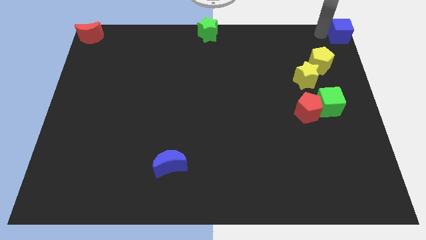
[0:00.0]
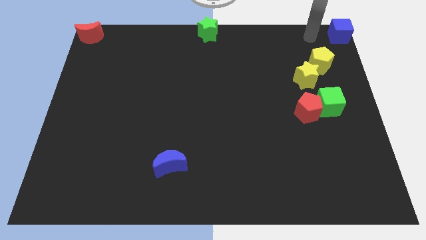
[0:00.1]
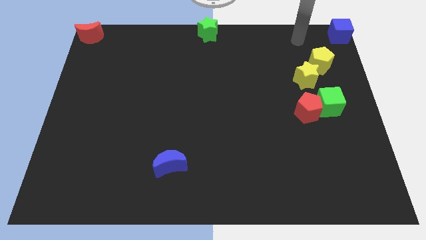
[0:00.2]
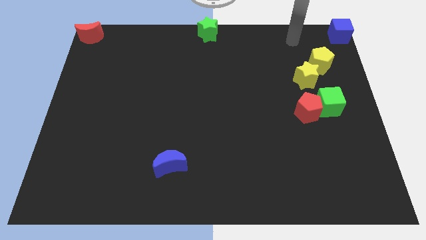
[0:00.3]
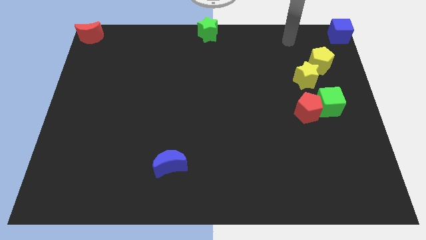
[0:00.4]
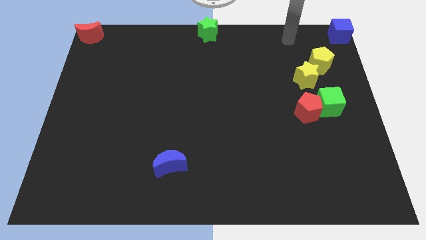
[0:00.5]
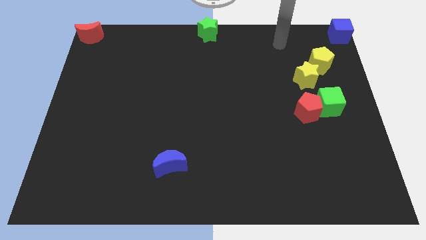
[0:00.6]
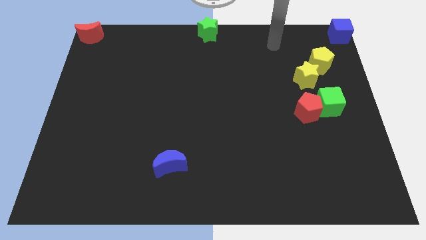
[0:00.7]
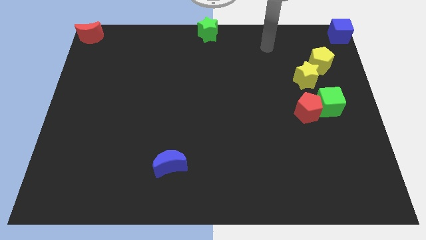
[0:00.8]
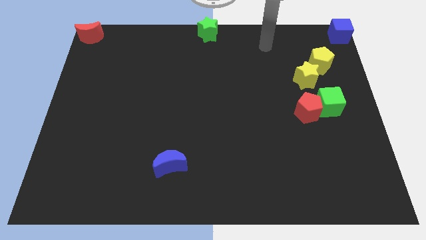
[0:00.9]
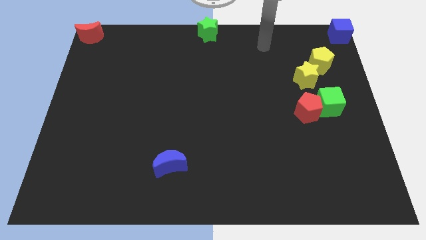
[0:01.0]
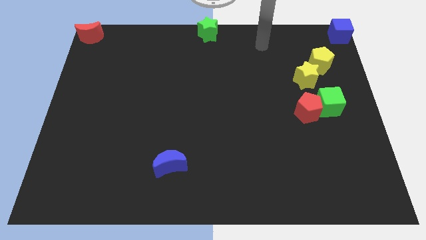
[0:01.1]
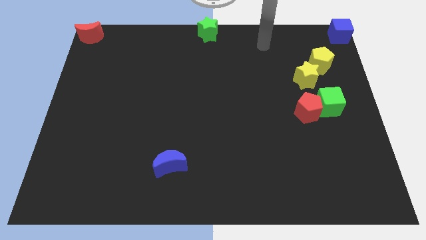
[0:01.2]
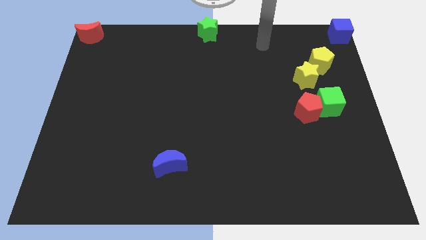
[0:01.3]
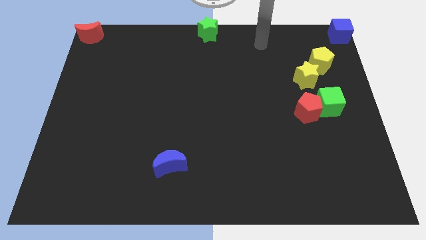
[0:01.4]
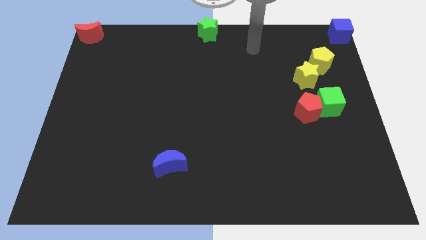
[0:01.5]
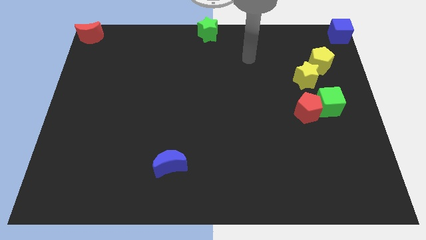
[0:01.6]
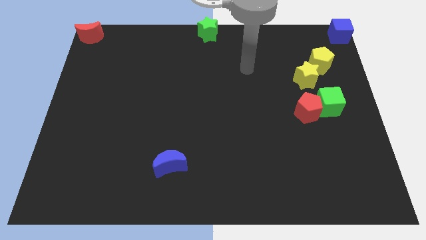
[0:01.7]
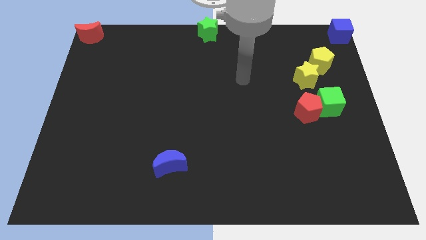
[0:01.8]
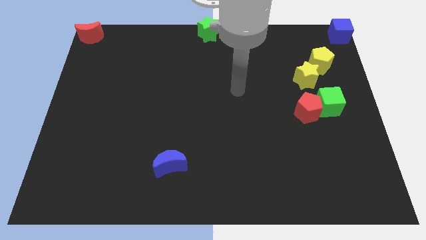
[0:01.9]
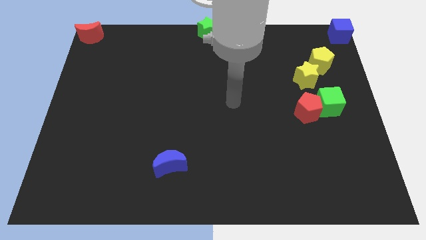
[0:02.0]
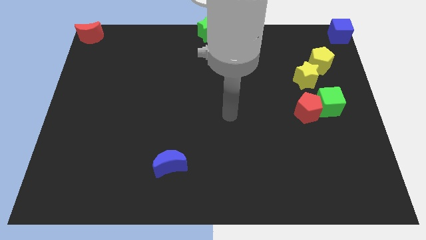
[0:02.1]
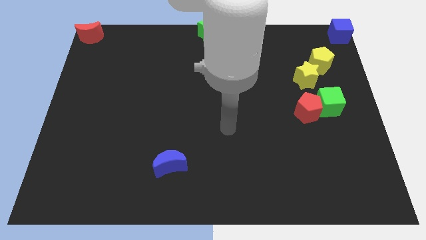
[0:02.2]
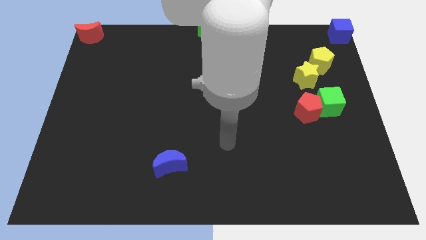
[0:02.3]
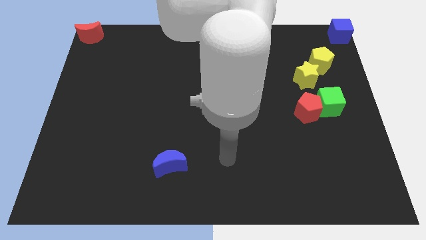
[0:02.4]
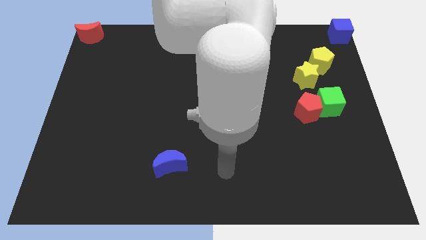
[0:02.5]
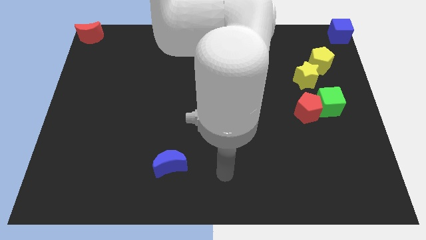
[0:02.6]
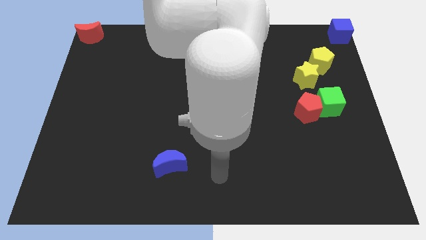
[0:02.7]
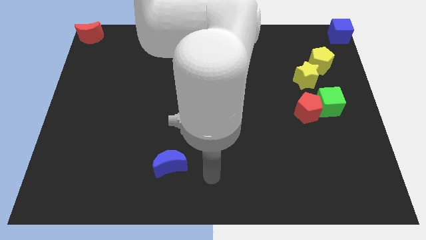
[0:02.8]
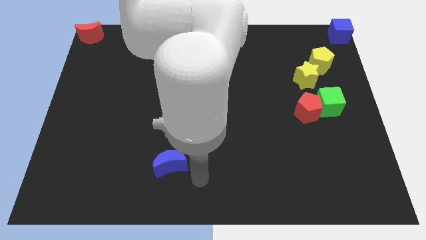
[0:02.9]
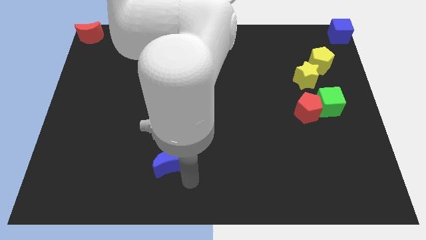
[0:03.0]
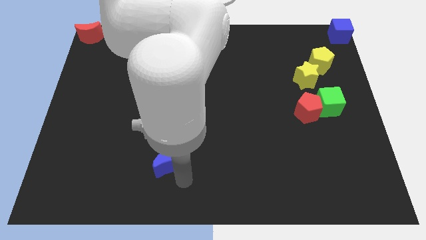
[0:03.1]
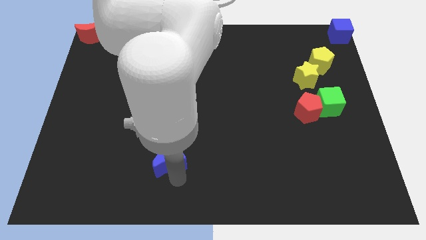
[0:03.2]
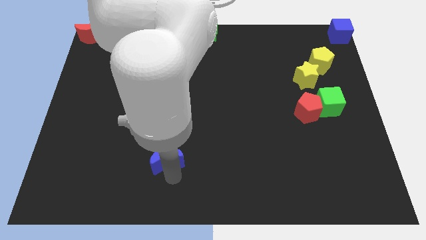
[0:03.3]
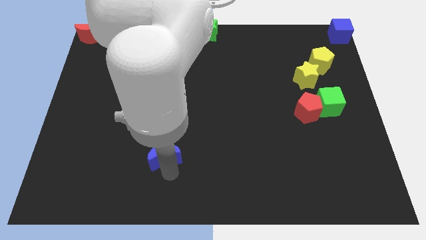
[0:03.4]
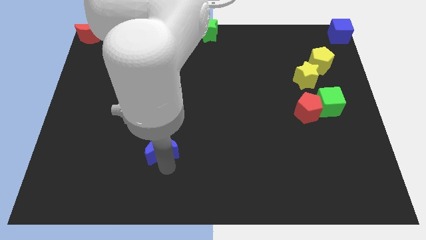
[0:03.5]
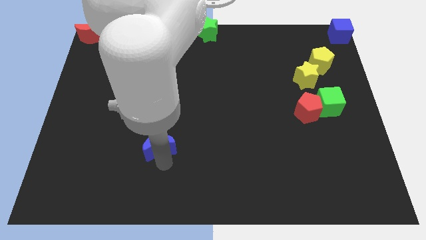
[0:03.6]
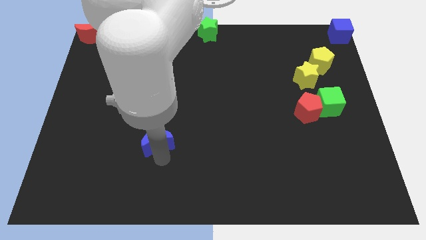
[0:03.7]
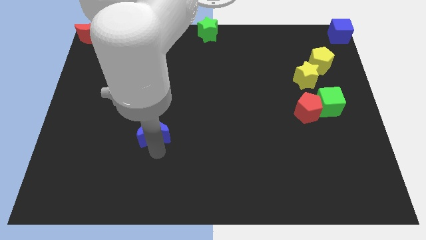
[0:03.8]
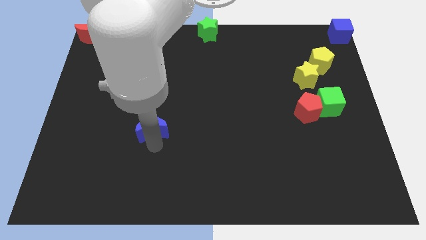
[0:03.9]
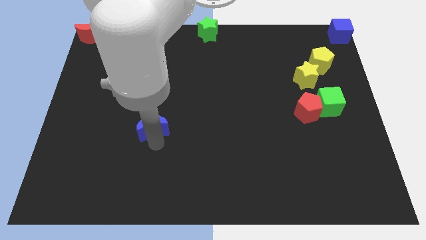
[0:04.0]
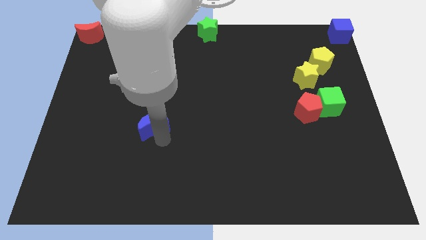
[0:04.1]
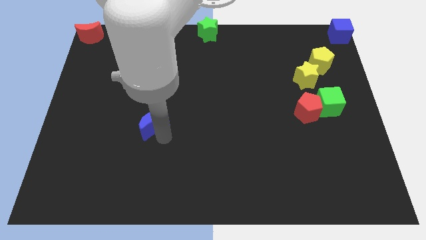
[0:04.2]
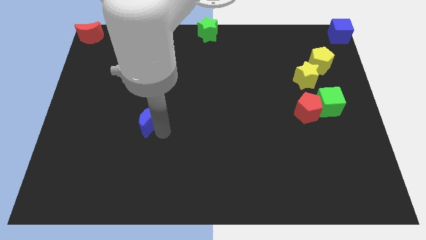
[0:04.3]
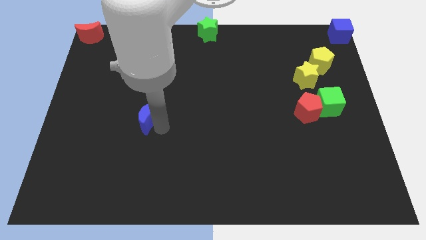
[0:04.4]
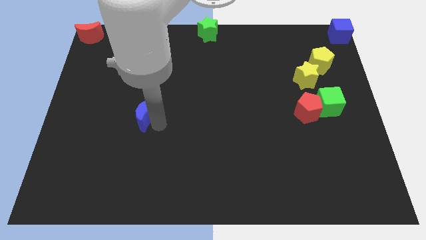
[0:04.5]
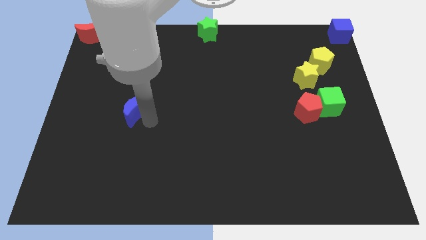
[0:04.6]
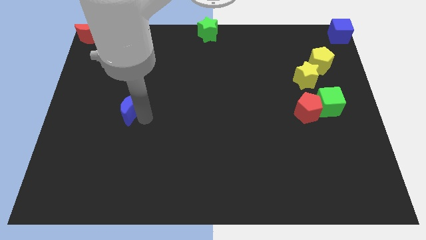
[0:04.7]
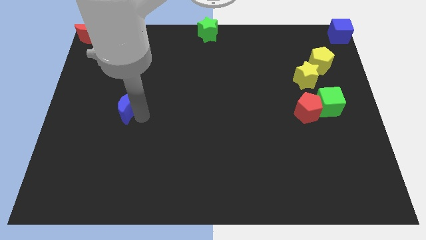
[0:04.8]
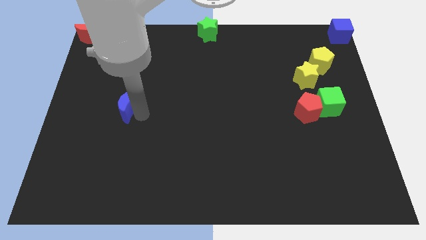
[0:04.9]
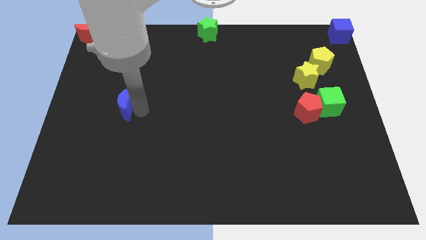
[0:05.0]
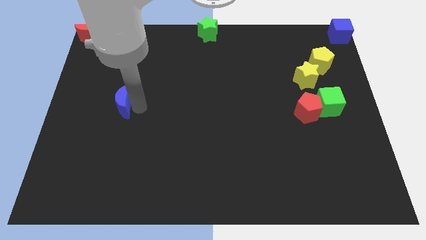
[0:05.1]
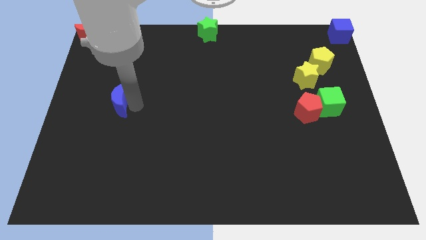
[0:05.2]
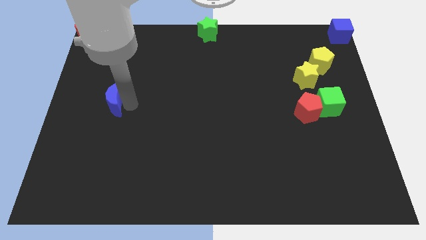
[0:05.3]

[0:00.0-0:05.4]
move blue moon towards left of the board

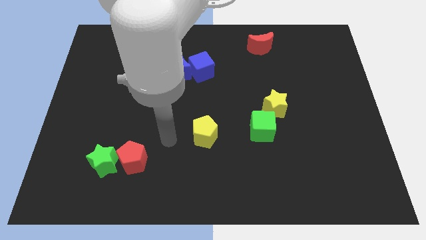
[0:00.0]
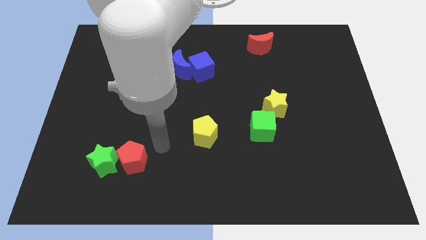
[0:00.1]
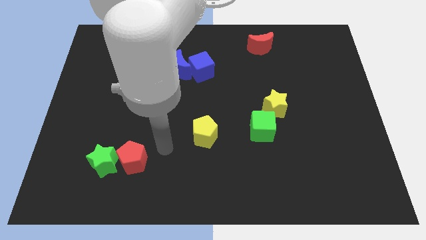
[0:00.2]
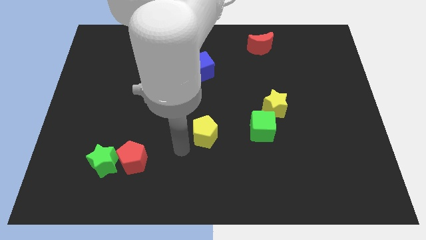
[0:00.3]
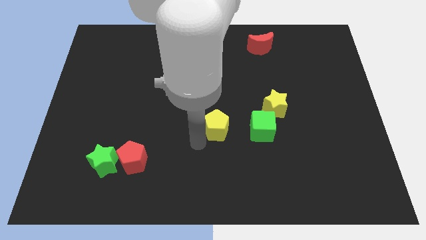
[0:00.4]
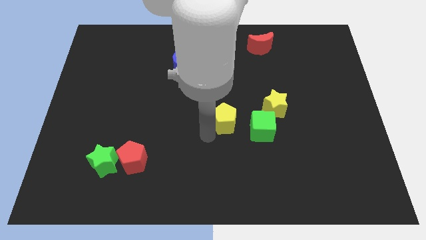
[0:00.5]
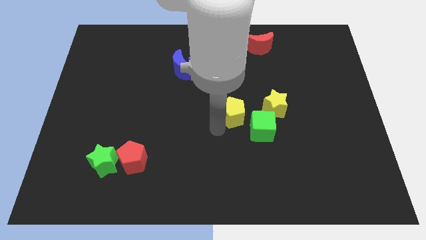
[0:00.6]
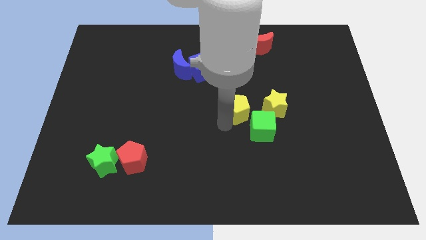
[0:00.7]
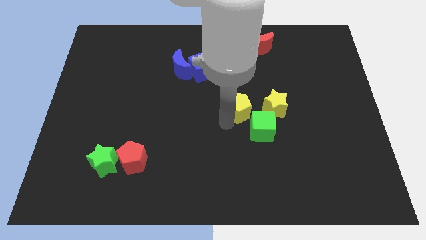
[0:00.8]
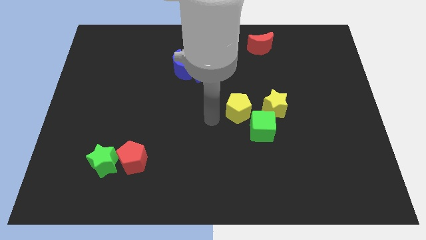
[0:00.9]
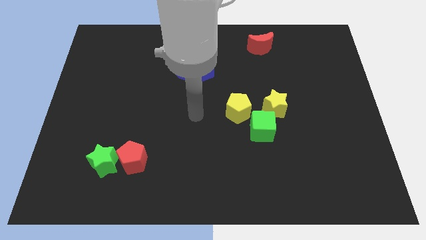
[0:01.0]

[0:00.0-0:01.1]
move the yellow pentagon to the left side of the yellow star

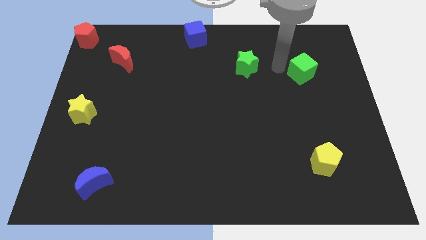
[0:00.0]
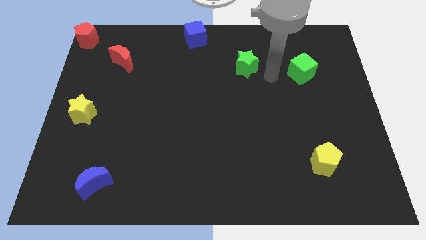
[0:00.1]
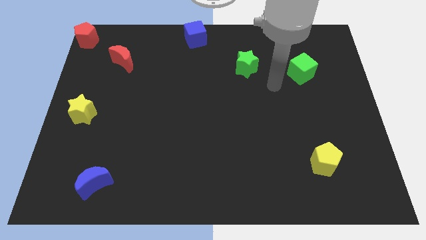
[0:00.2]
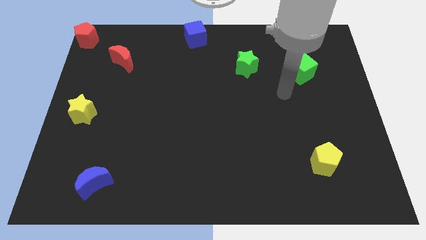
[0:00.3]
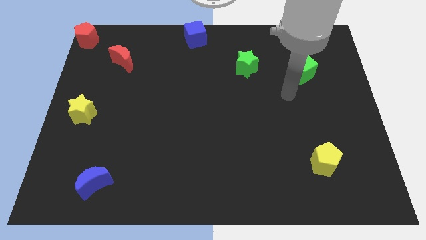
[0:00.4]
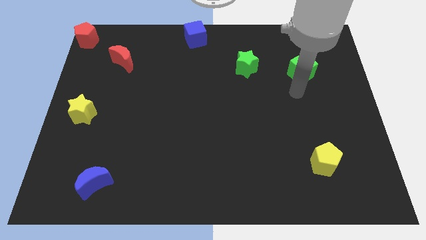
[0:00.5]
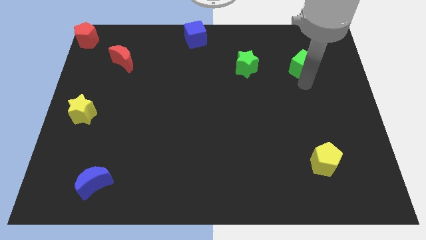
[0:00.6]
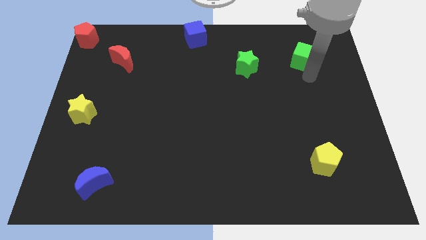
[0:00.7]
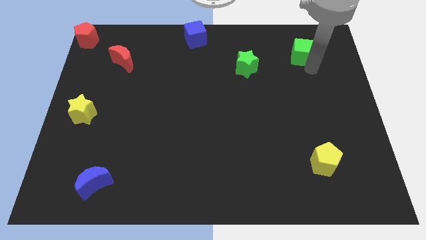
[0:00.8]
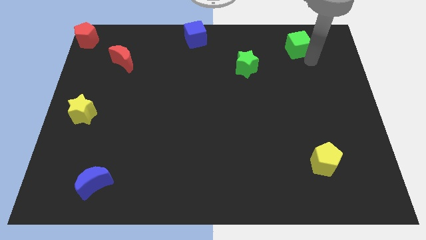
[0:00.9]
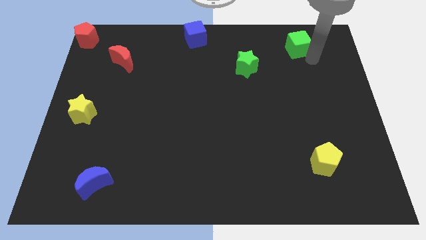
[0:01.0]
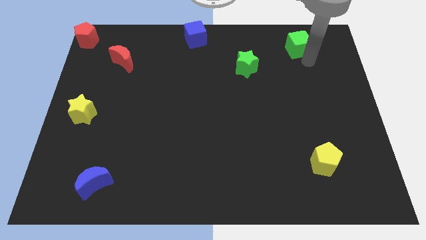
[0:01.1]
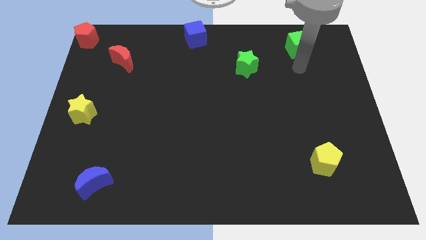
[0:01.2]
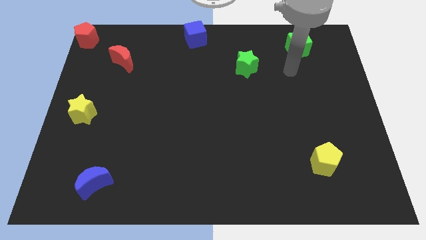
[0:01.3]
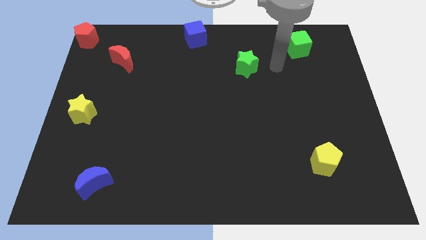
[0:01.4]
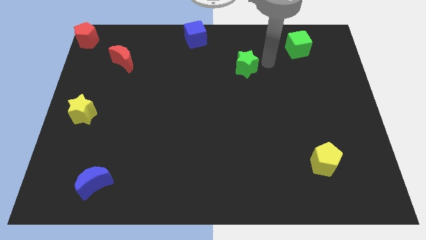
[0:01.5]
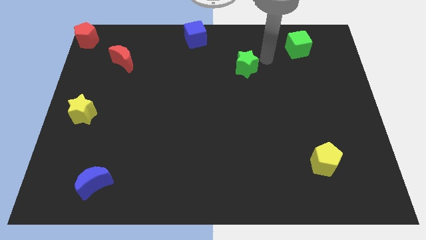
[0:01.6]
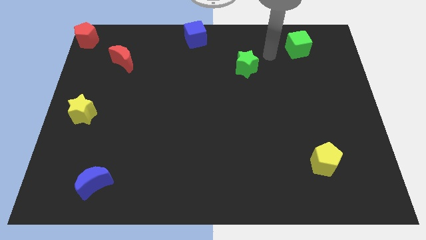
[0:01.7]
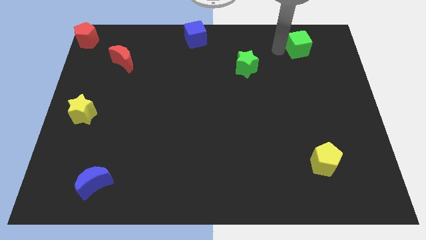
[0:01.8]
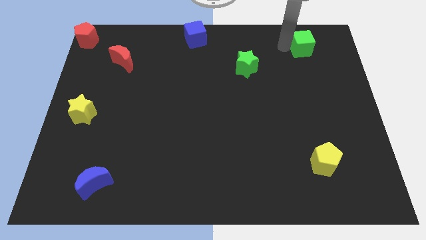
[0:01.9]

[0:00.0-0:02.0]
push the green cube towards the top side of the board

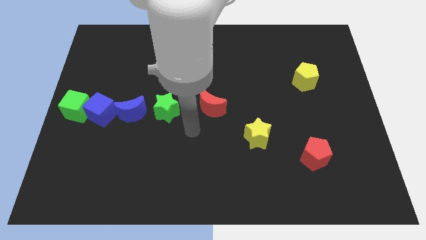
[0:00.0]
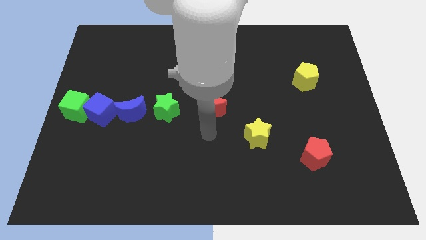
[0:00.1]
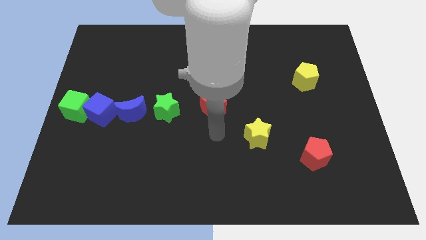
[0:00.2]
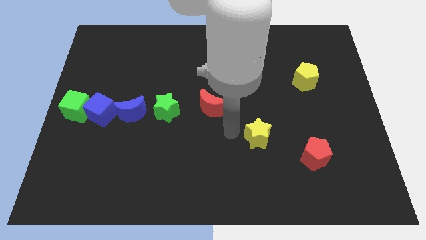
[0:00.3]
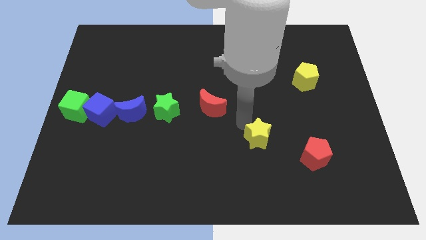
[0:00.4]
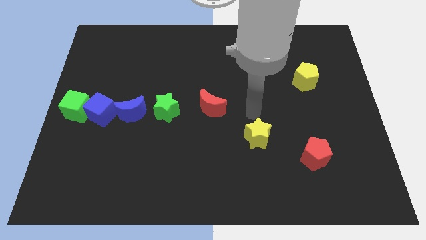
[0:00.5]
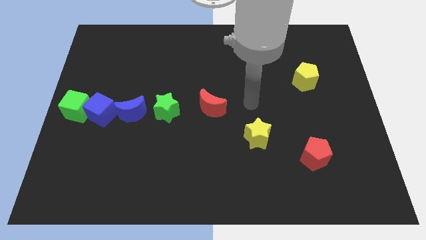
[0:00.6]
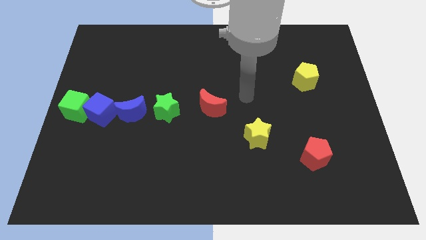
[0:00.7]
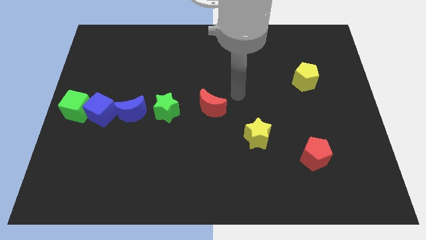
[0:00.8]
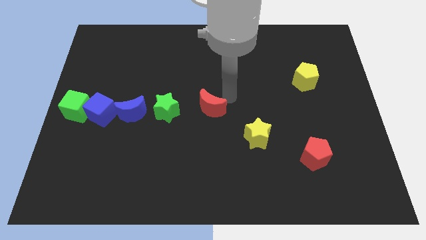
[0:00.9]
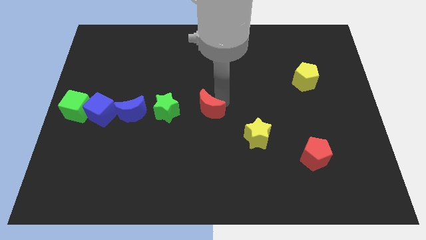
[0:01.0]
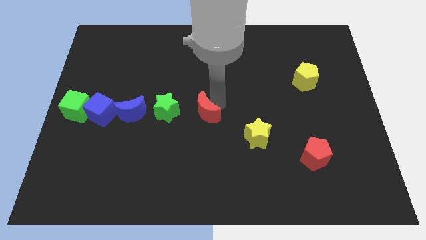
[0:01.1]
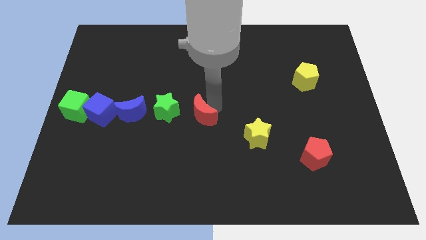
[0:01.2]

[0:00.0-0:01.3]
put the red moon to the right side of the green star
